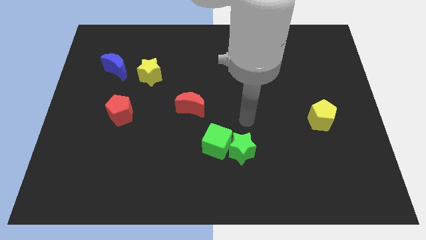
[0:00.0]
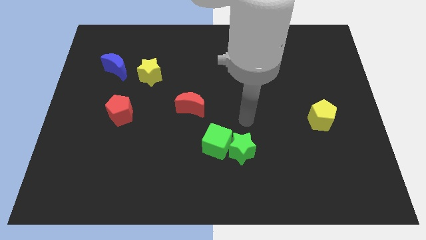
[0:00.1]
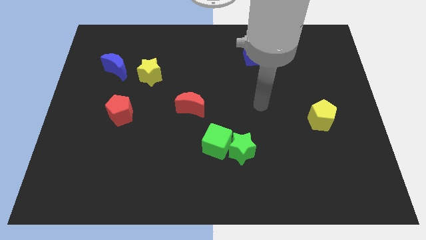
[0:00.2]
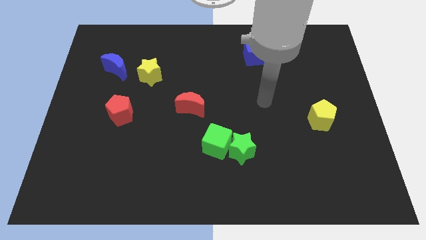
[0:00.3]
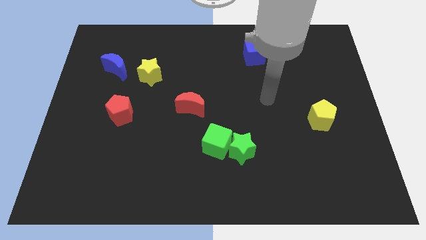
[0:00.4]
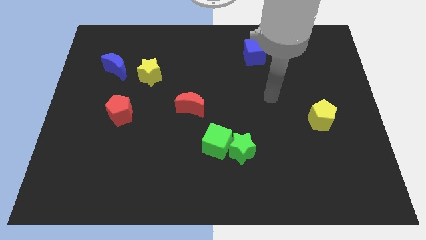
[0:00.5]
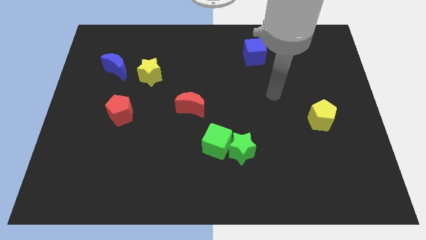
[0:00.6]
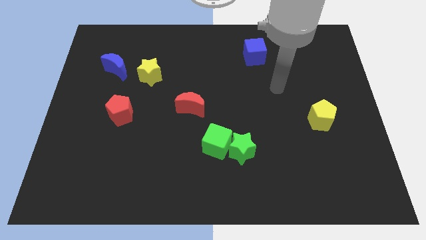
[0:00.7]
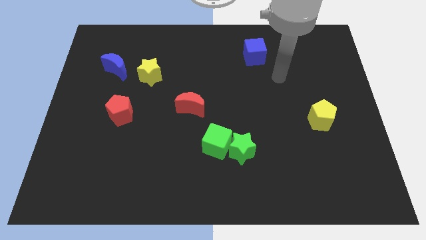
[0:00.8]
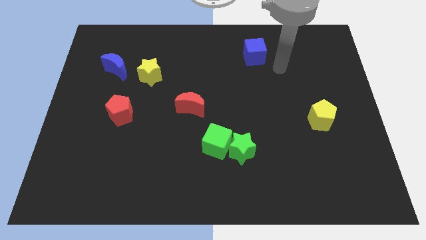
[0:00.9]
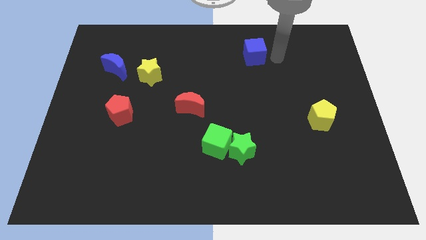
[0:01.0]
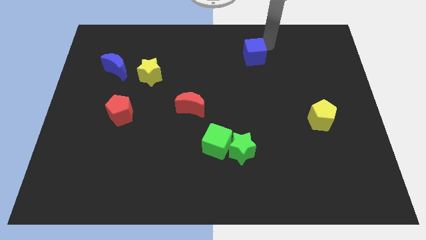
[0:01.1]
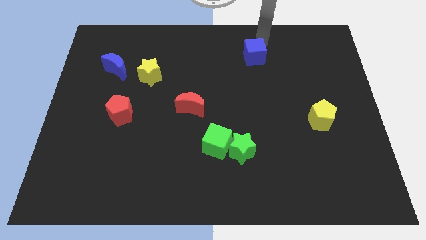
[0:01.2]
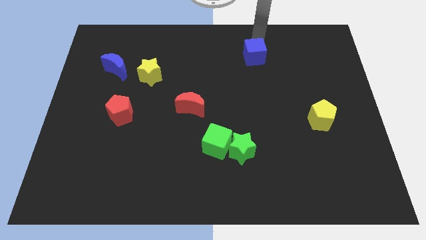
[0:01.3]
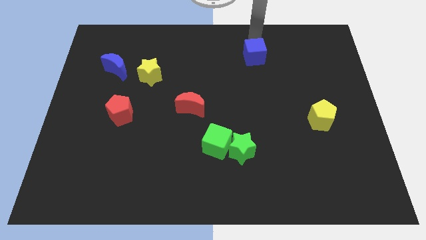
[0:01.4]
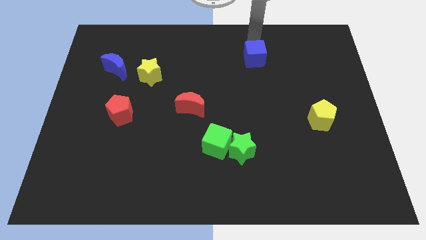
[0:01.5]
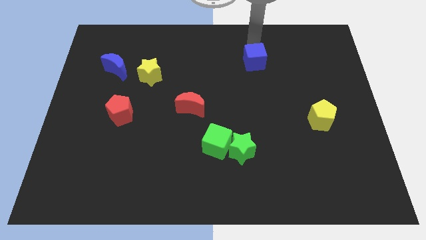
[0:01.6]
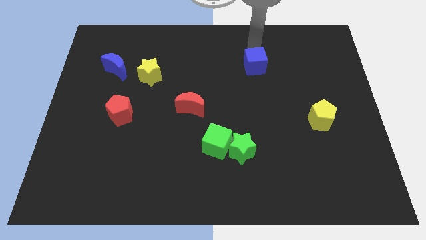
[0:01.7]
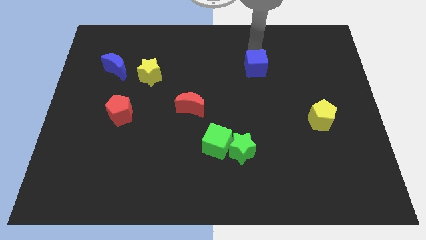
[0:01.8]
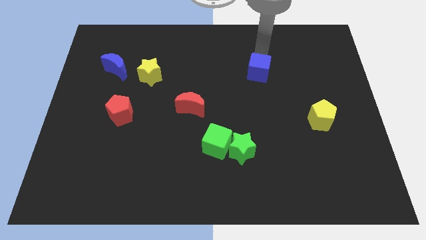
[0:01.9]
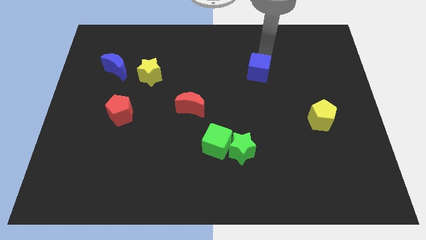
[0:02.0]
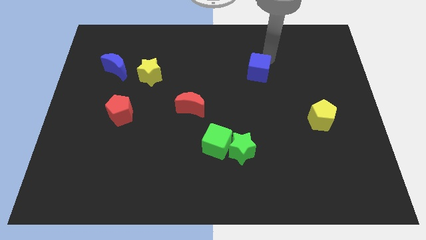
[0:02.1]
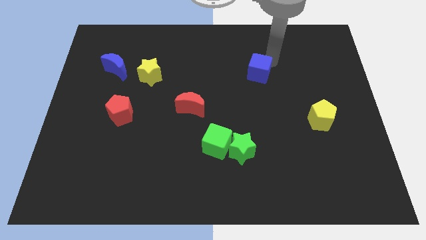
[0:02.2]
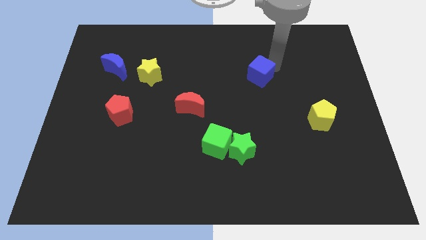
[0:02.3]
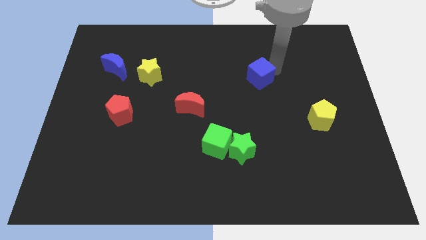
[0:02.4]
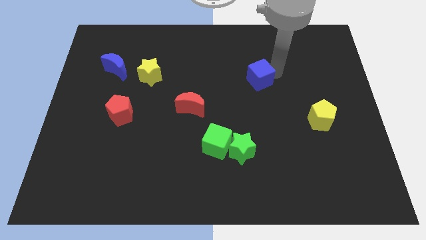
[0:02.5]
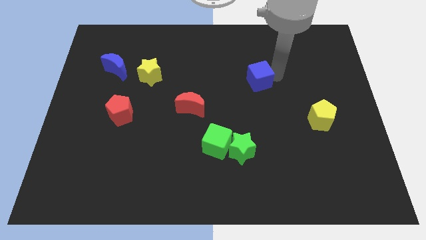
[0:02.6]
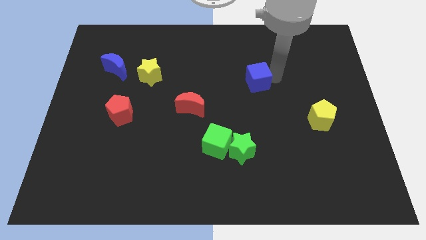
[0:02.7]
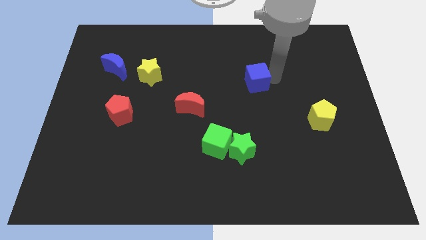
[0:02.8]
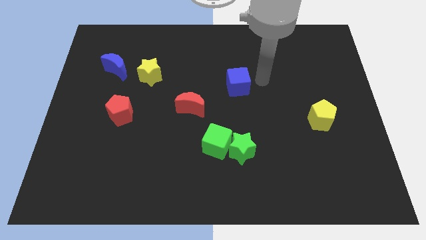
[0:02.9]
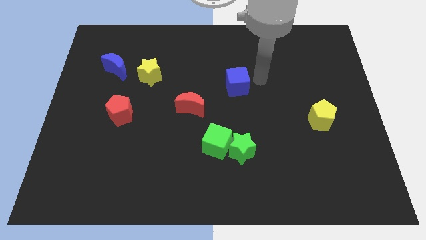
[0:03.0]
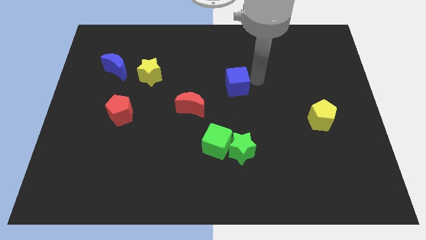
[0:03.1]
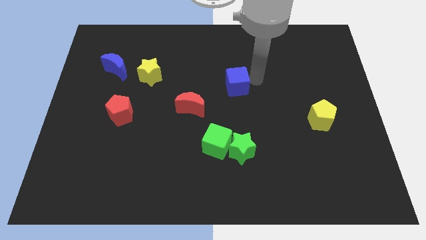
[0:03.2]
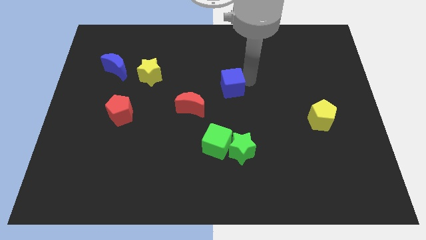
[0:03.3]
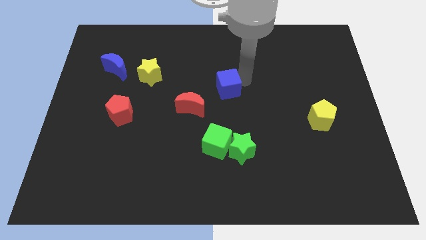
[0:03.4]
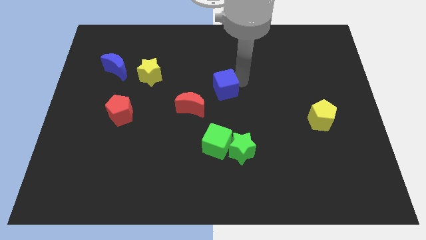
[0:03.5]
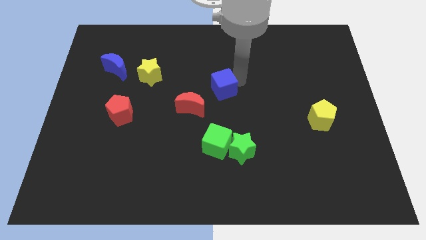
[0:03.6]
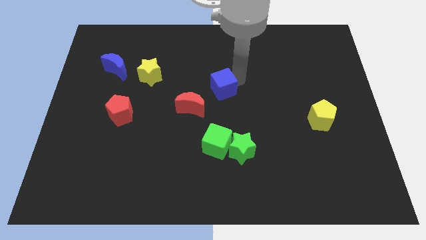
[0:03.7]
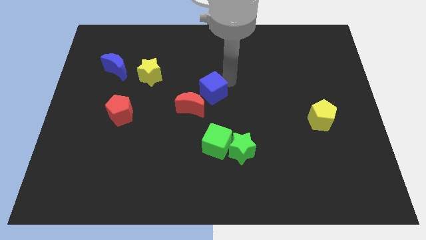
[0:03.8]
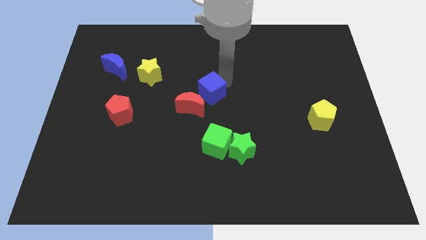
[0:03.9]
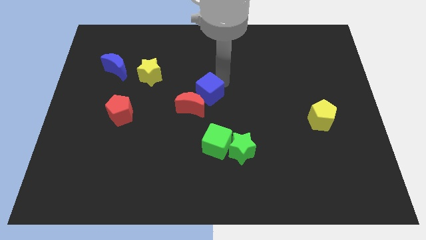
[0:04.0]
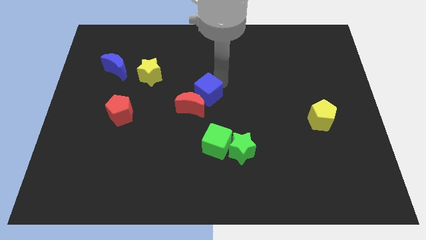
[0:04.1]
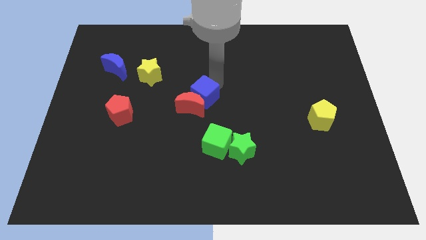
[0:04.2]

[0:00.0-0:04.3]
put the blue cube next to the red moon

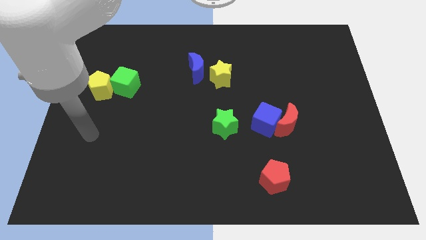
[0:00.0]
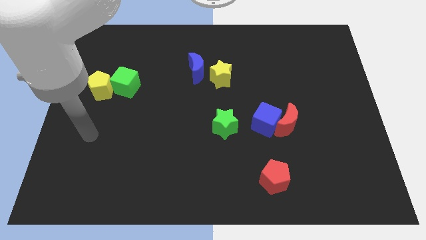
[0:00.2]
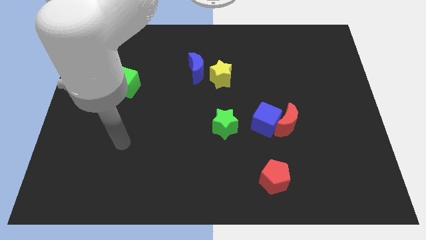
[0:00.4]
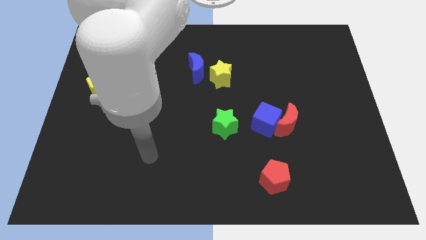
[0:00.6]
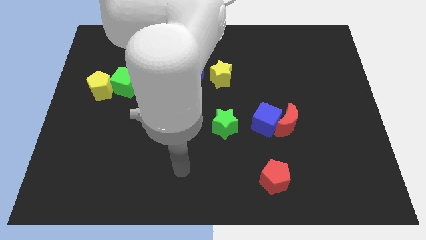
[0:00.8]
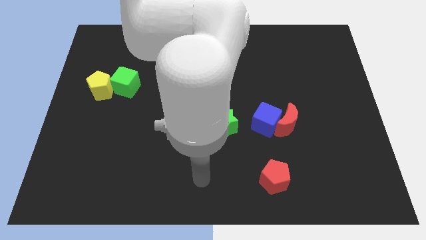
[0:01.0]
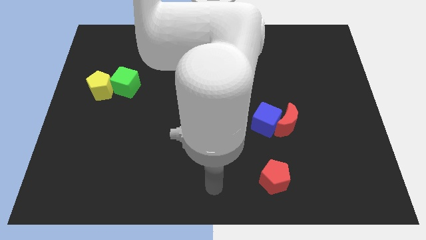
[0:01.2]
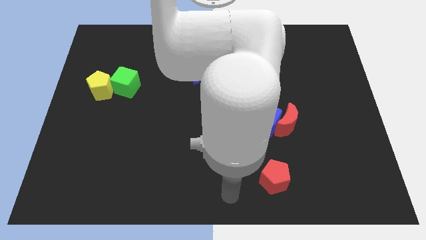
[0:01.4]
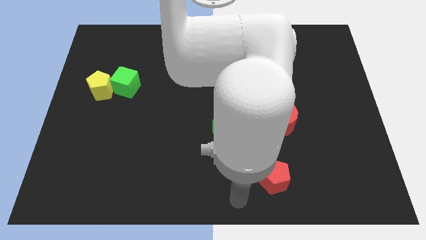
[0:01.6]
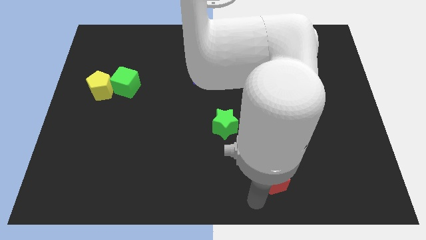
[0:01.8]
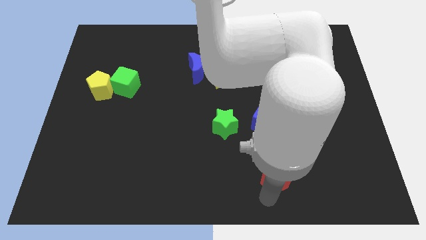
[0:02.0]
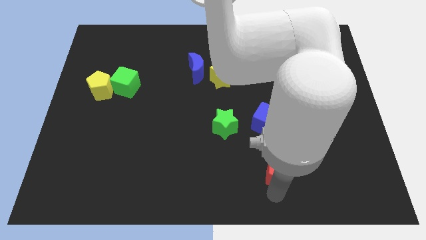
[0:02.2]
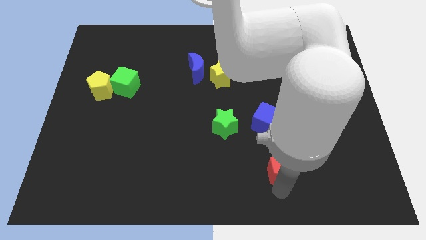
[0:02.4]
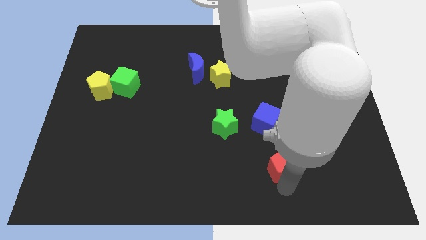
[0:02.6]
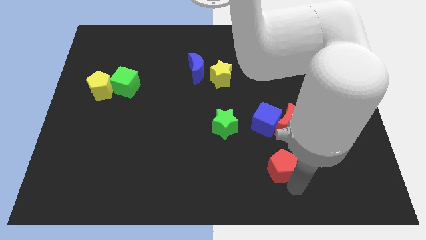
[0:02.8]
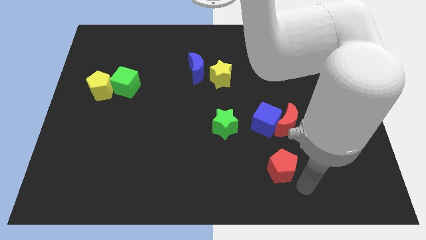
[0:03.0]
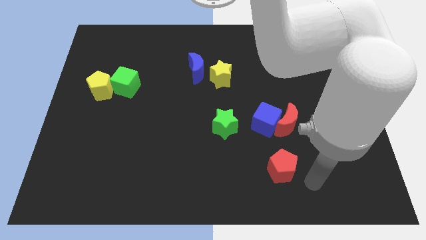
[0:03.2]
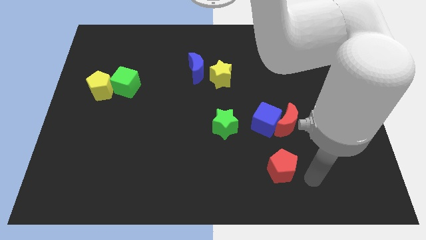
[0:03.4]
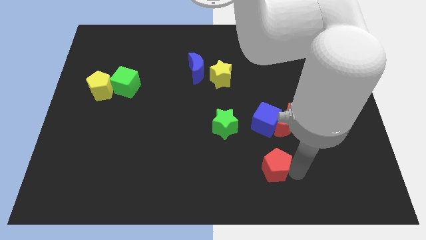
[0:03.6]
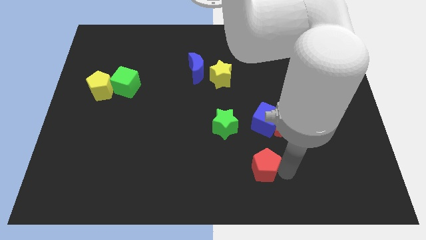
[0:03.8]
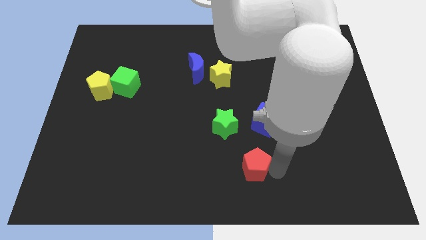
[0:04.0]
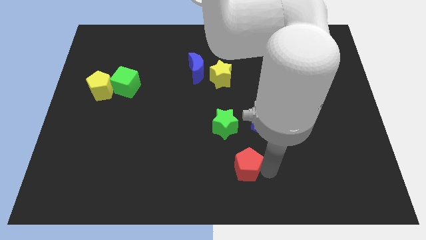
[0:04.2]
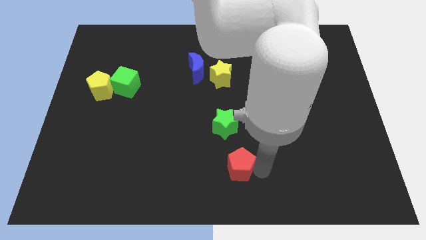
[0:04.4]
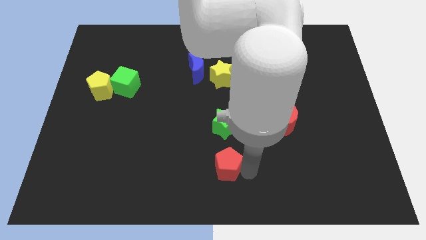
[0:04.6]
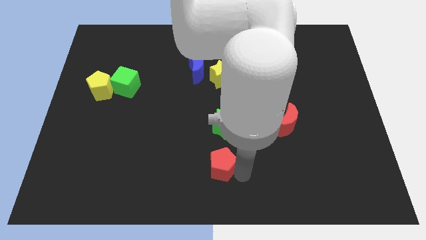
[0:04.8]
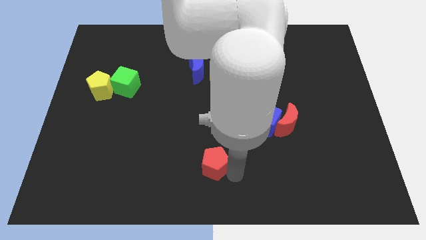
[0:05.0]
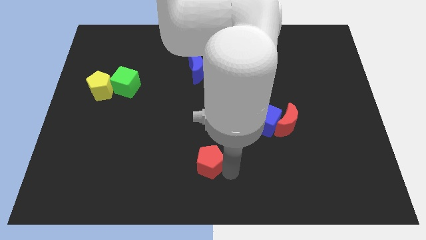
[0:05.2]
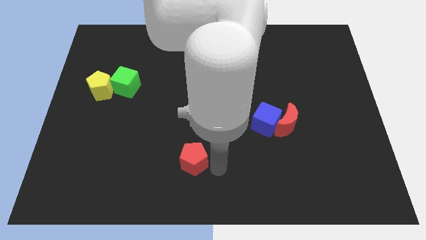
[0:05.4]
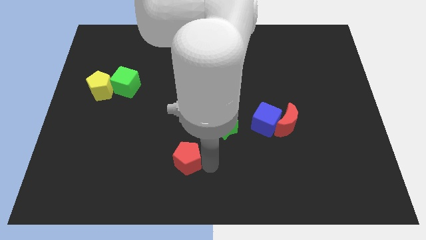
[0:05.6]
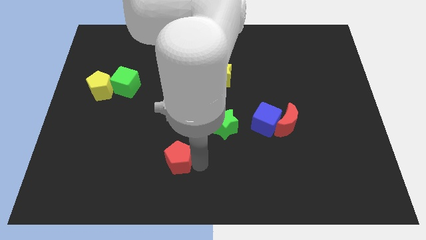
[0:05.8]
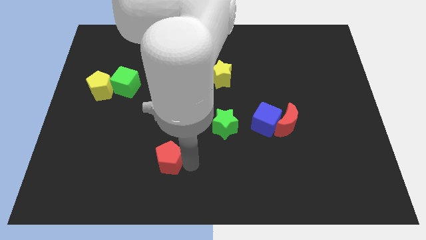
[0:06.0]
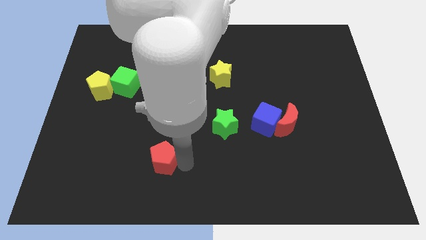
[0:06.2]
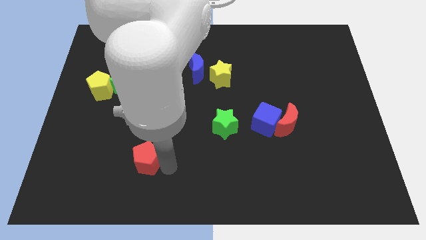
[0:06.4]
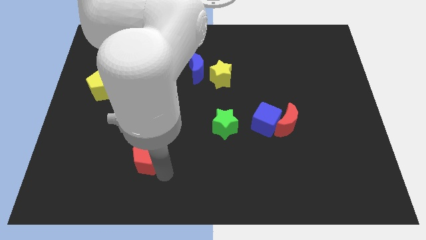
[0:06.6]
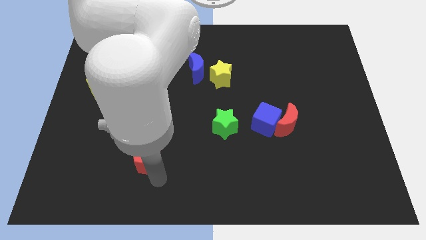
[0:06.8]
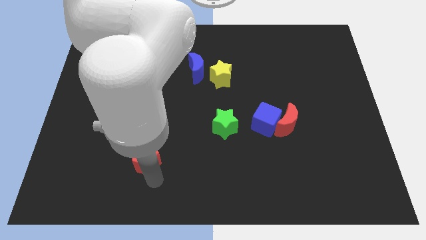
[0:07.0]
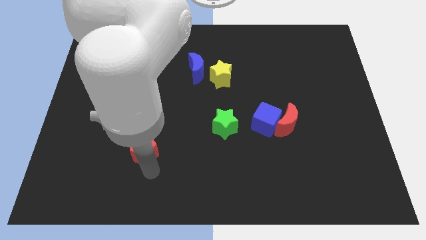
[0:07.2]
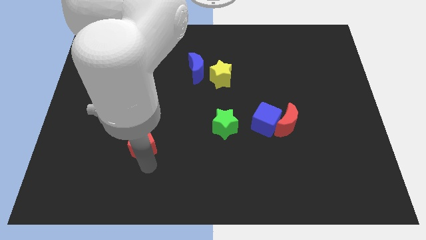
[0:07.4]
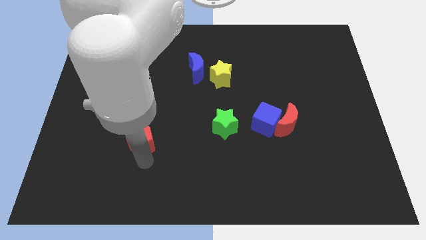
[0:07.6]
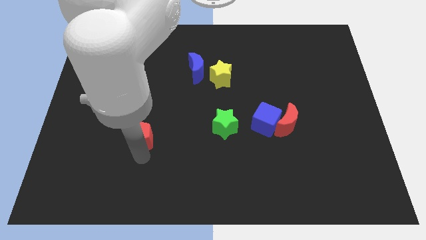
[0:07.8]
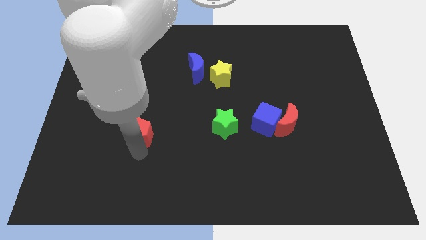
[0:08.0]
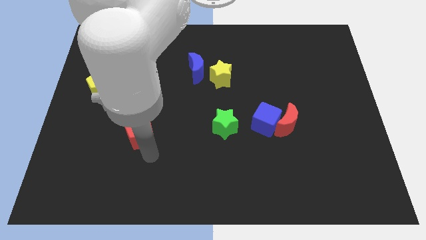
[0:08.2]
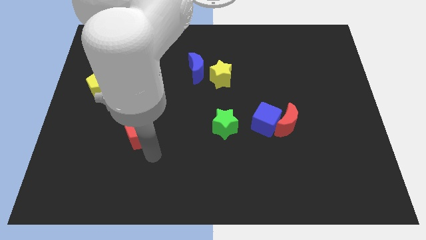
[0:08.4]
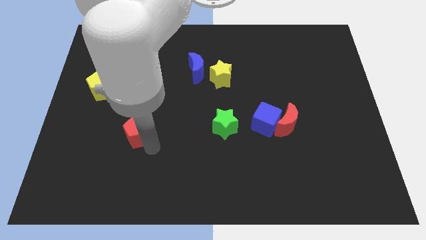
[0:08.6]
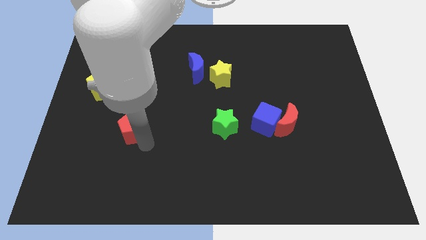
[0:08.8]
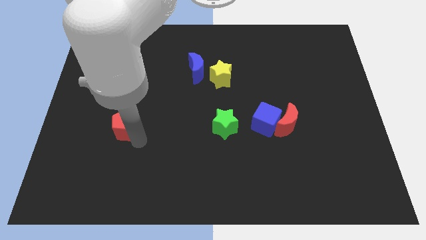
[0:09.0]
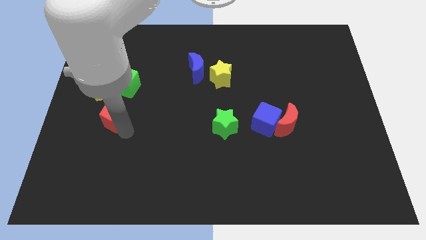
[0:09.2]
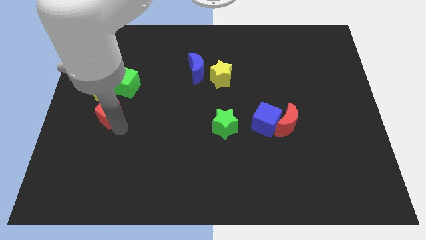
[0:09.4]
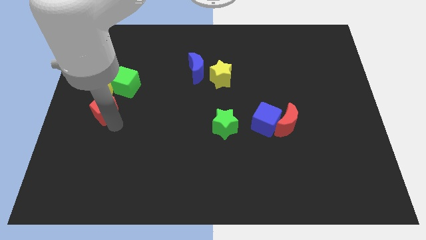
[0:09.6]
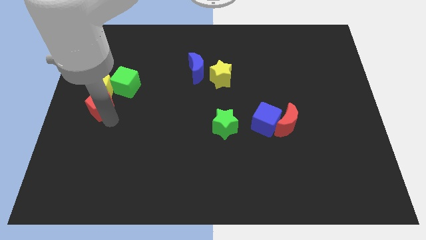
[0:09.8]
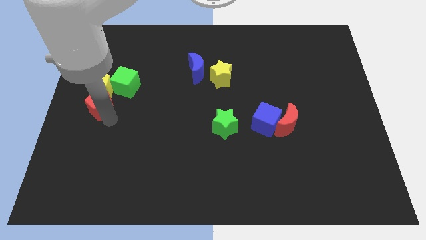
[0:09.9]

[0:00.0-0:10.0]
push the red pentagon towards the yellow pentagon
